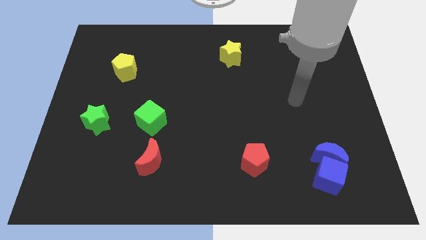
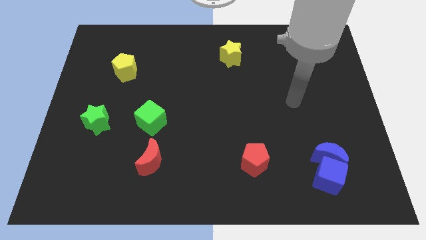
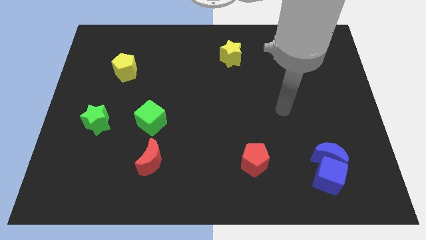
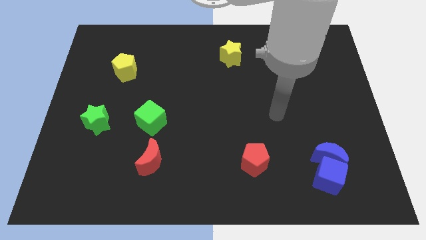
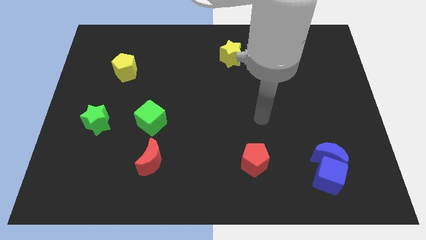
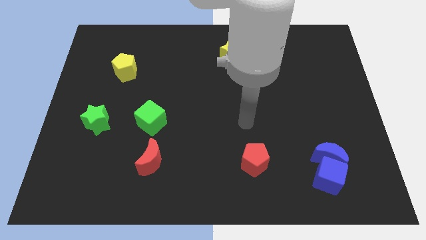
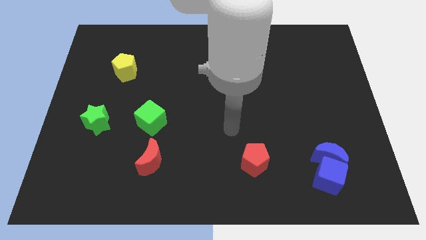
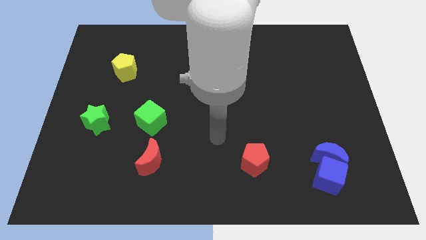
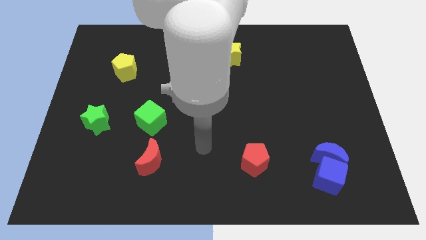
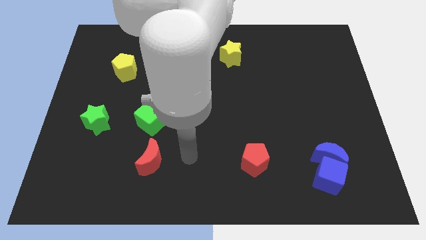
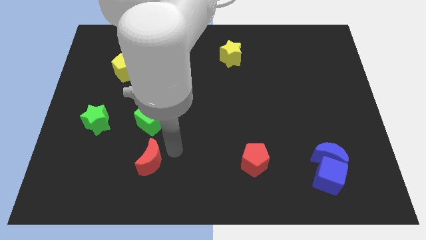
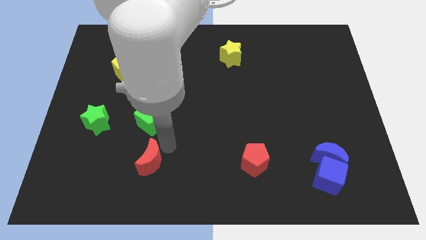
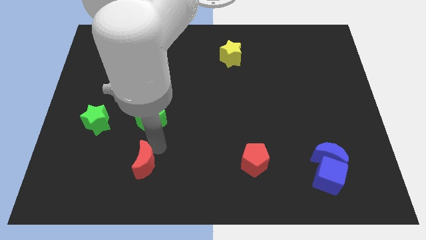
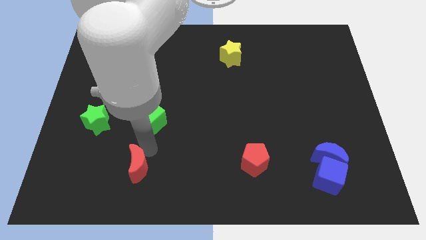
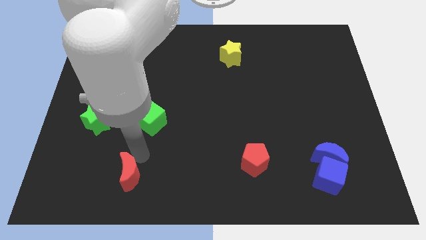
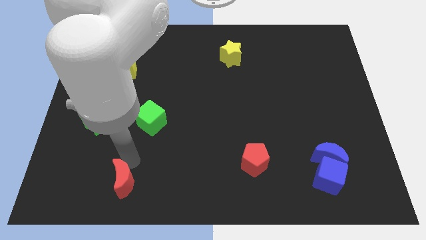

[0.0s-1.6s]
move the red moon towards the bottom side

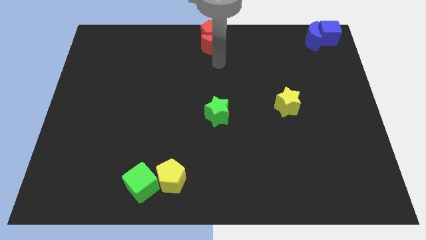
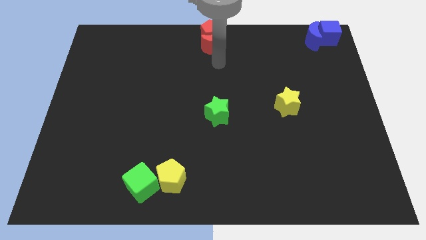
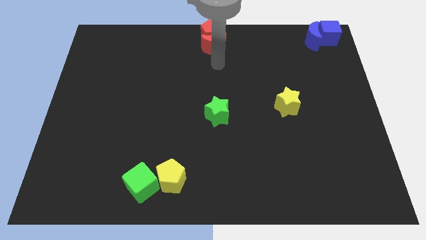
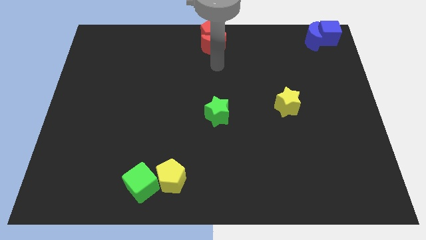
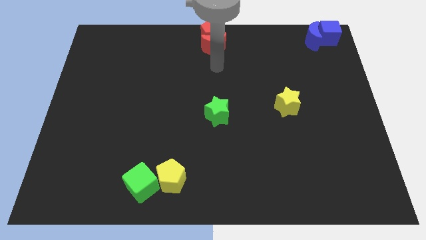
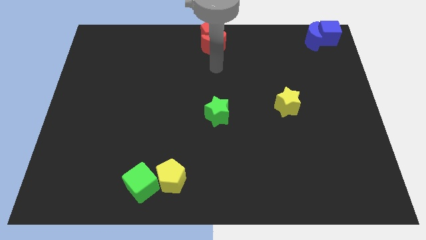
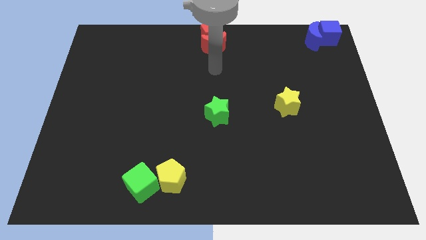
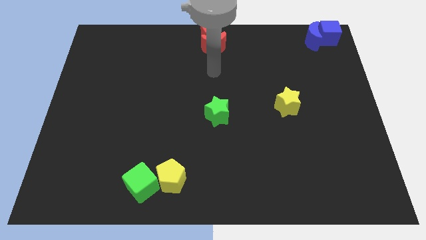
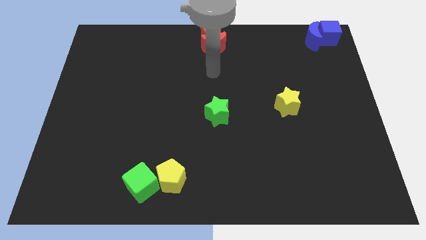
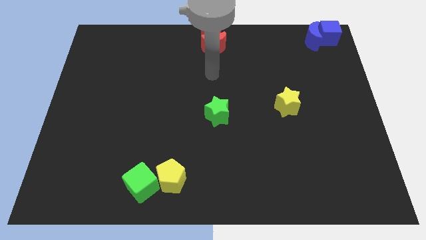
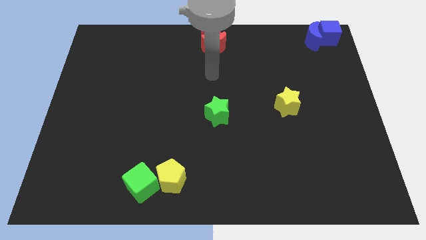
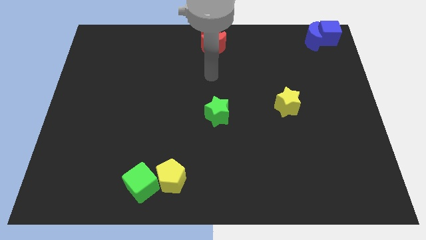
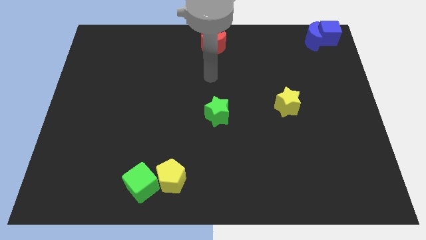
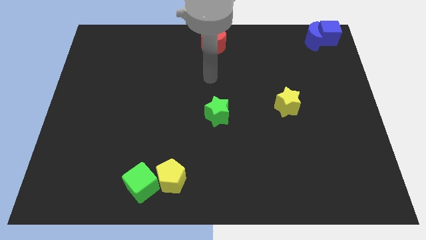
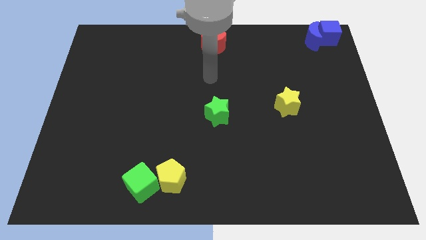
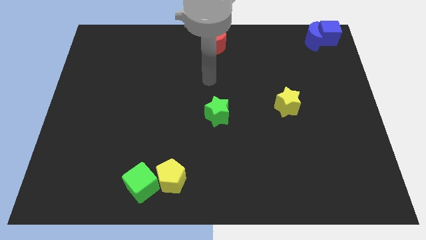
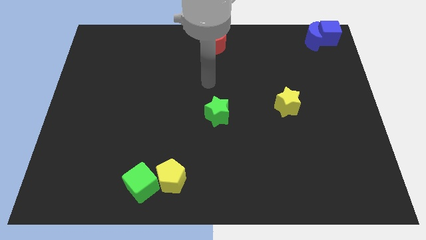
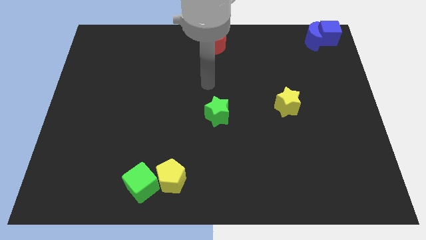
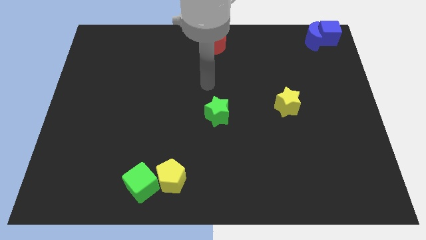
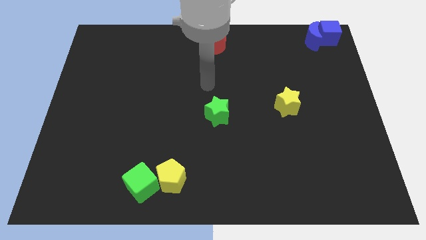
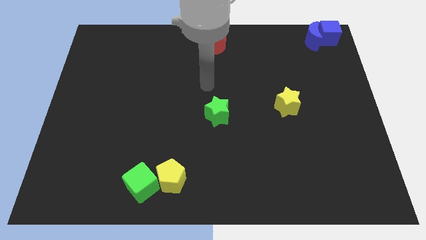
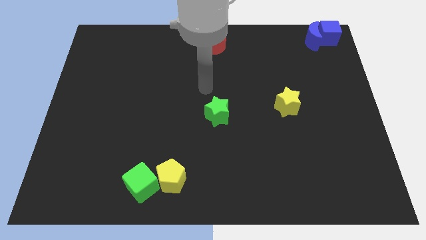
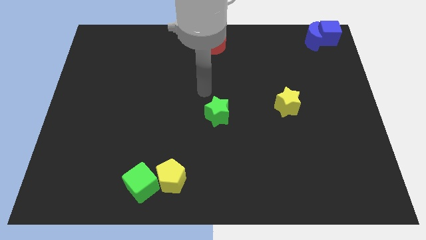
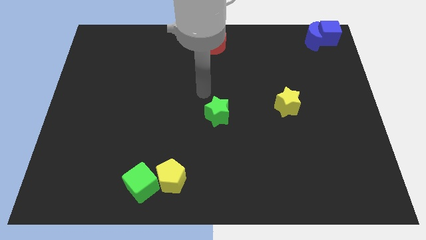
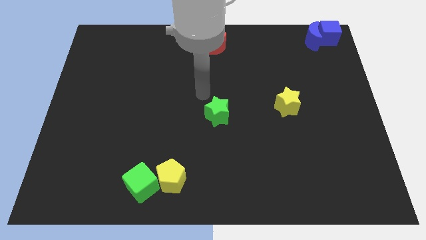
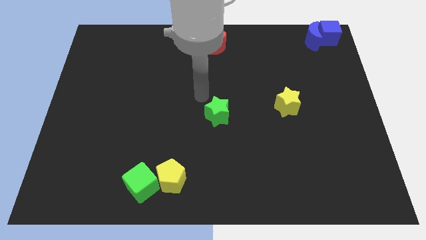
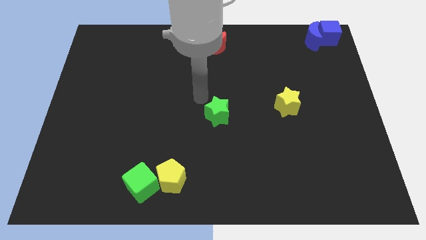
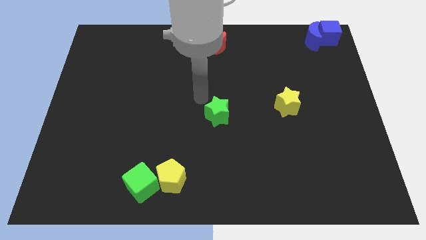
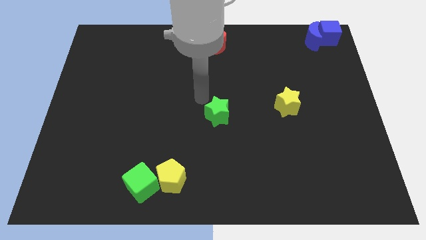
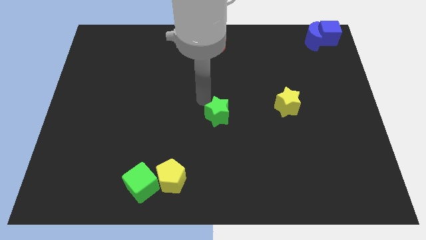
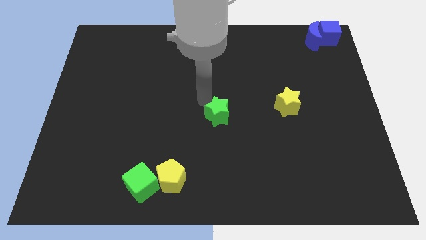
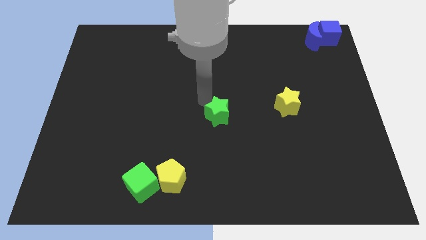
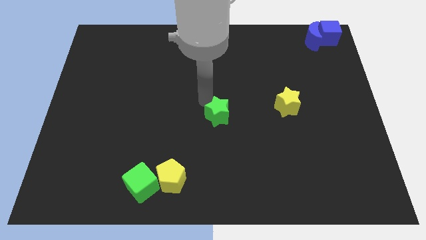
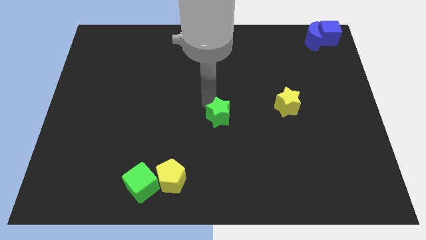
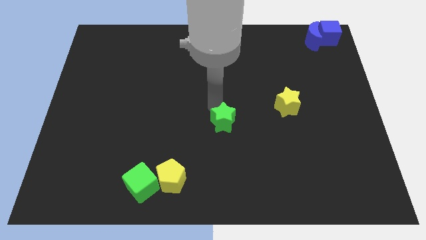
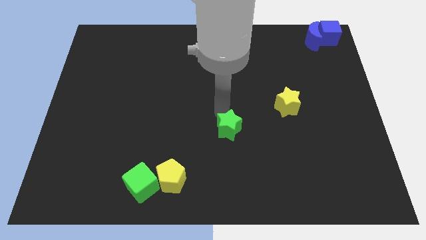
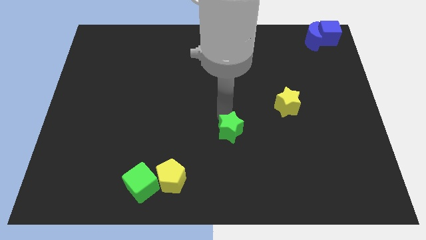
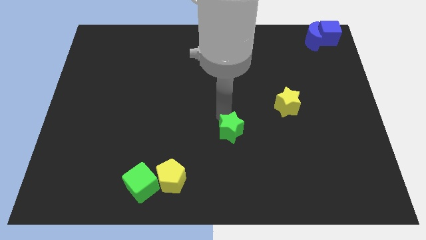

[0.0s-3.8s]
move the arm away from the red moon

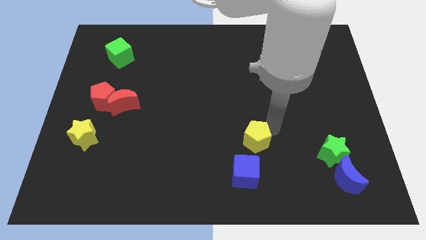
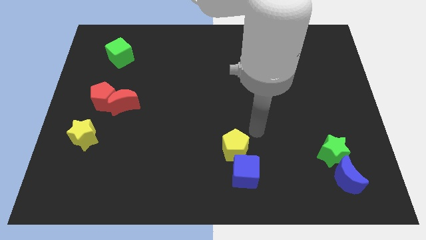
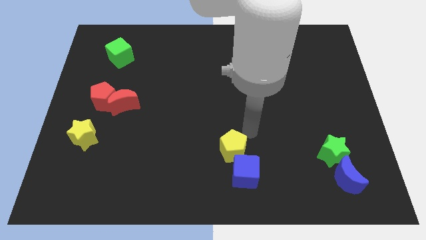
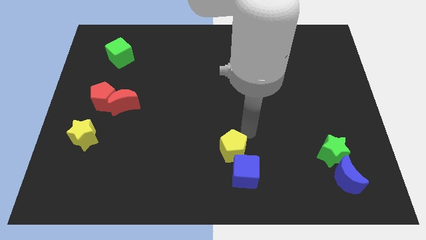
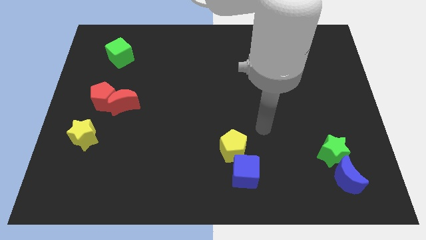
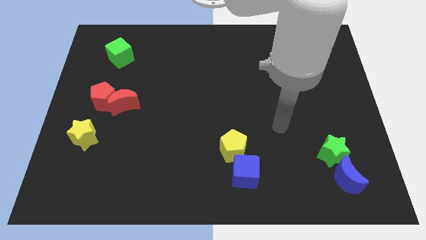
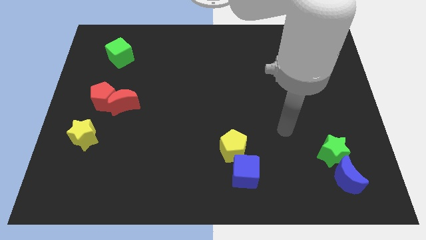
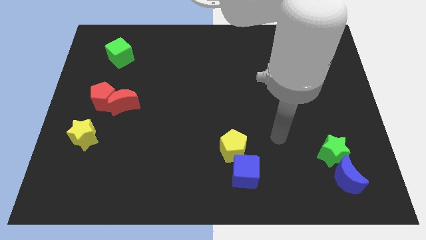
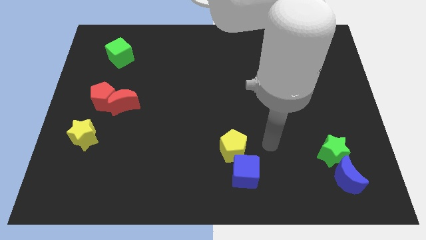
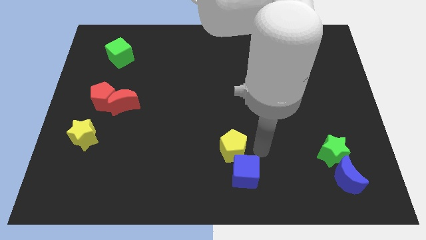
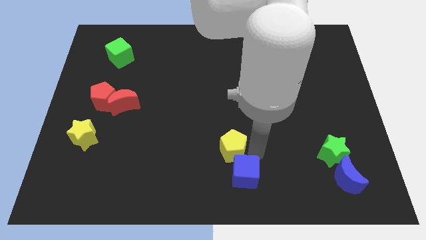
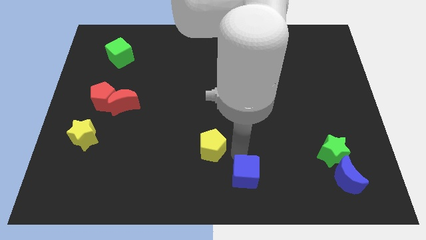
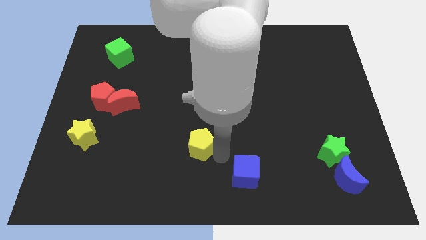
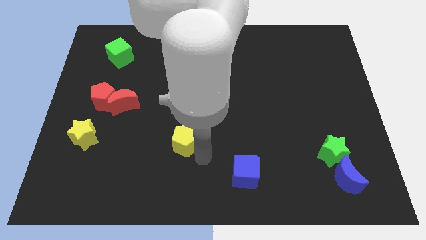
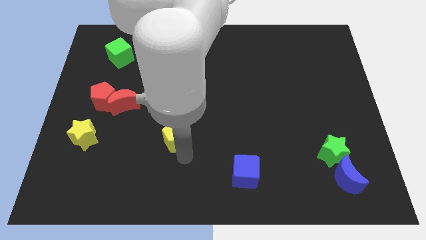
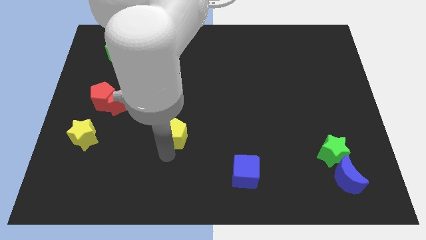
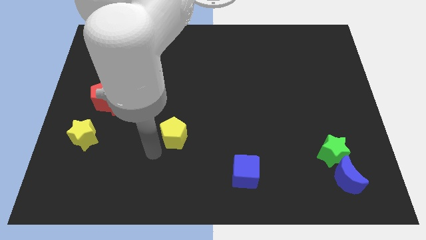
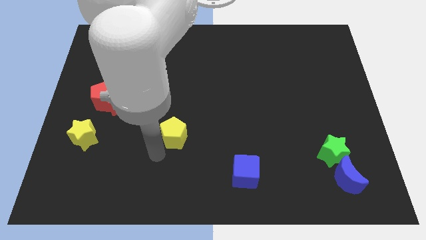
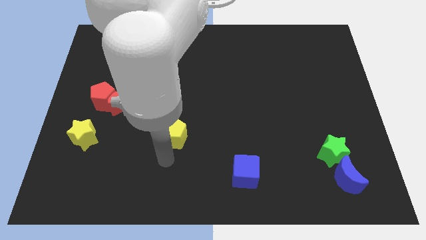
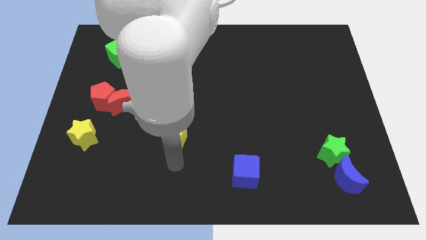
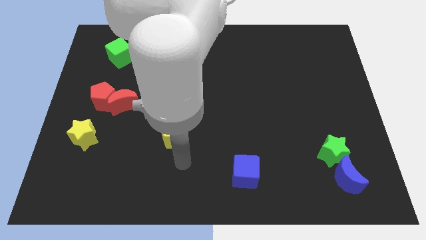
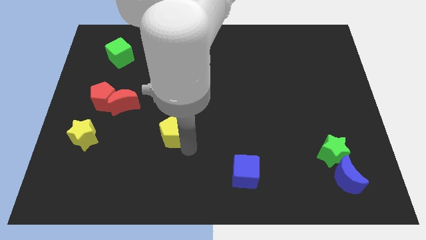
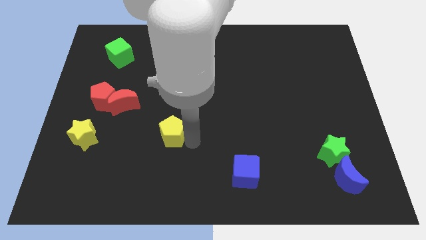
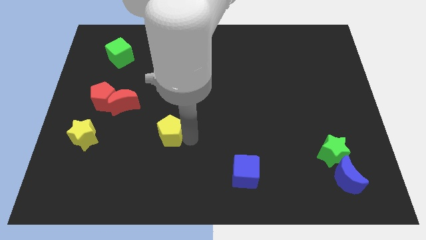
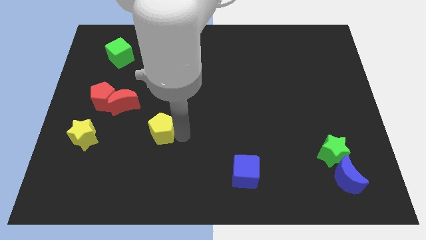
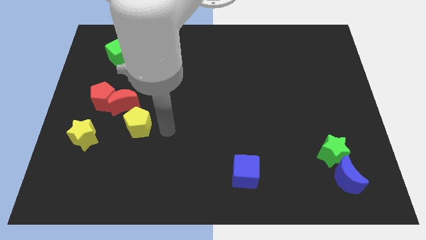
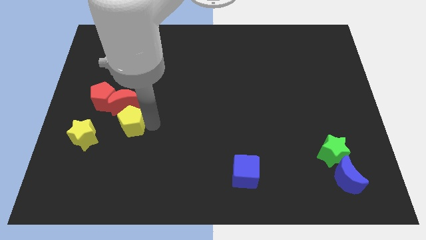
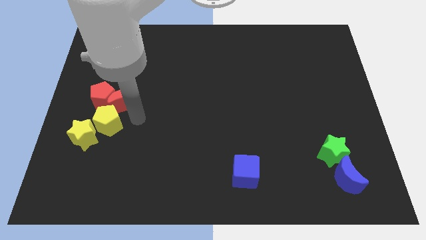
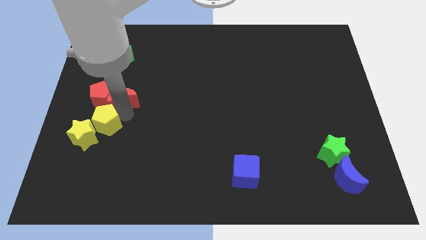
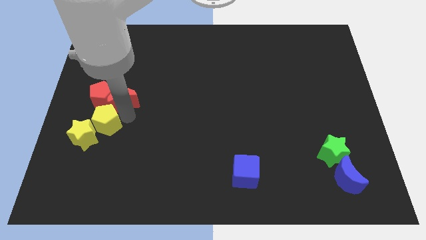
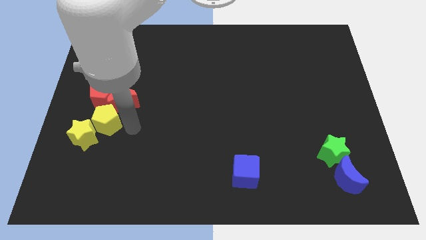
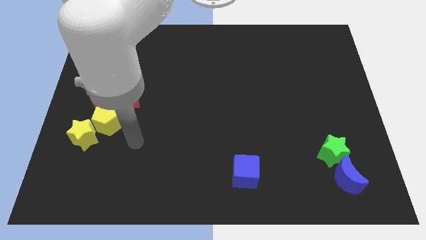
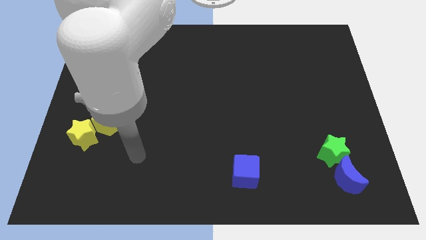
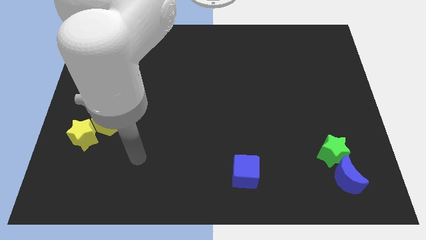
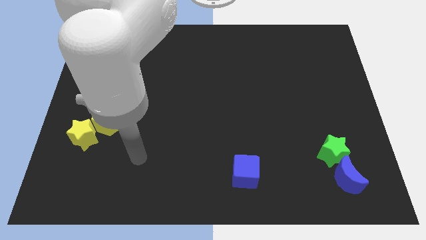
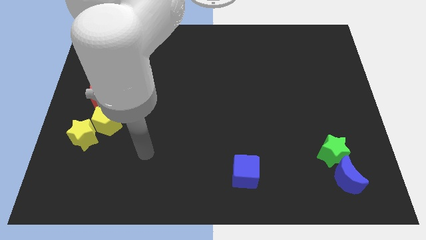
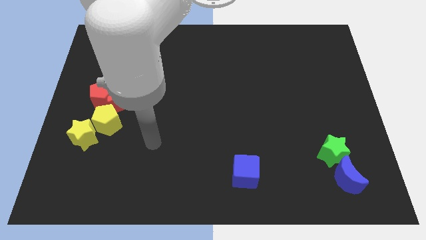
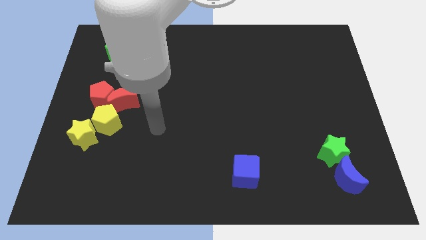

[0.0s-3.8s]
place the yellow pentagon to the top right of yellow star
